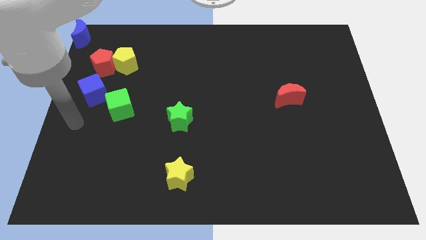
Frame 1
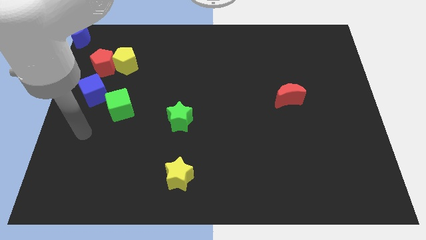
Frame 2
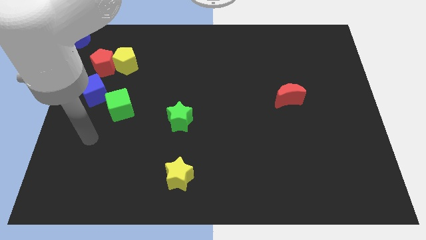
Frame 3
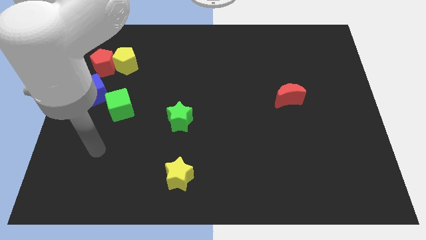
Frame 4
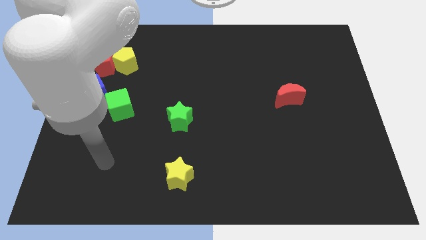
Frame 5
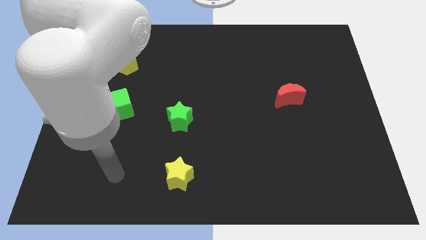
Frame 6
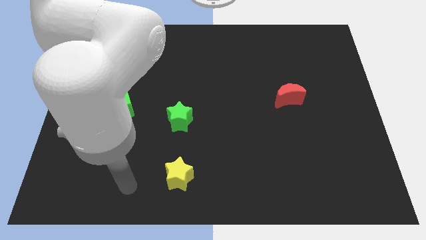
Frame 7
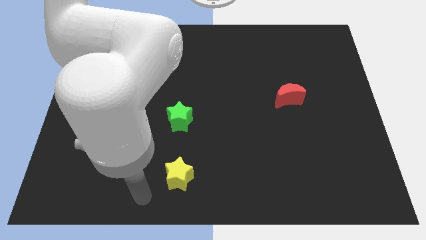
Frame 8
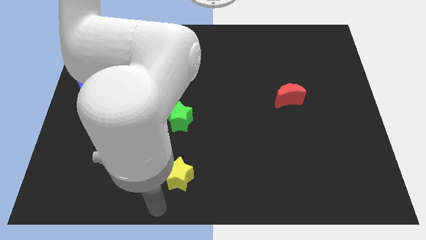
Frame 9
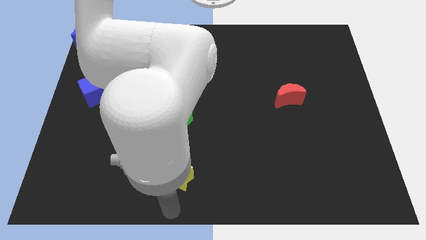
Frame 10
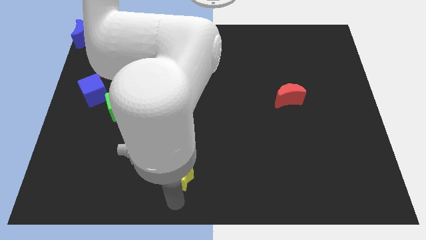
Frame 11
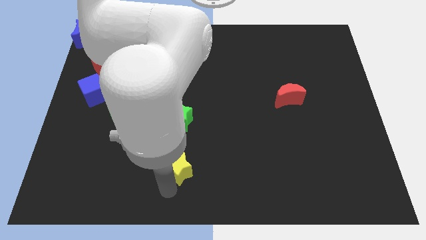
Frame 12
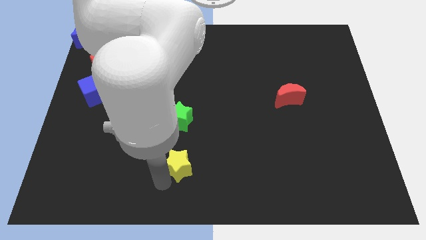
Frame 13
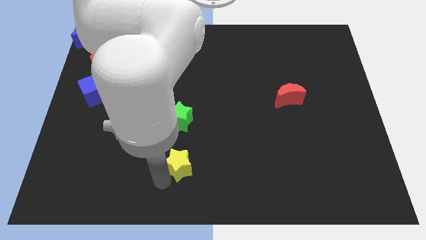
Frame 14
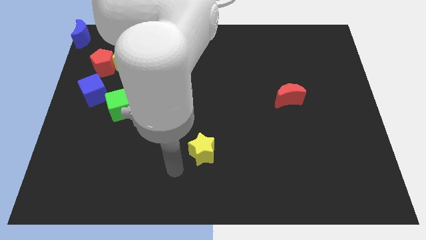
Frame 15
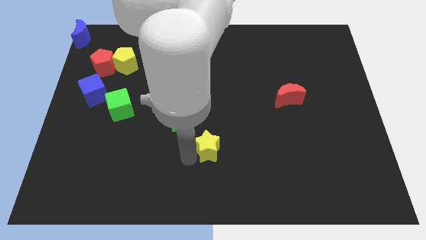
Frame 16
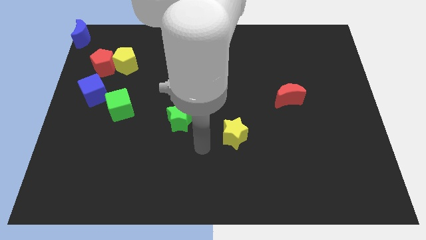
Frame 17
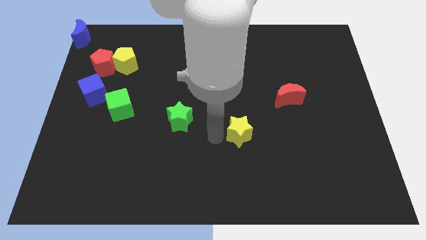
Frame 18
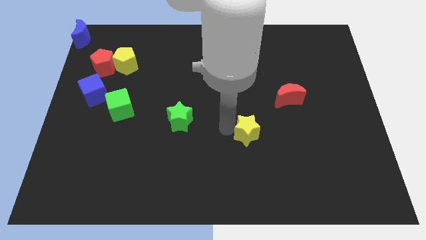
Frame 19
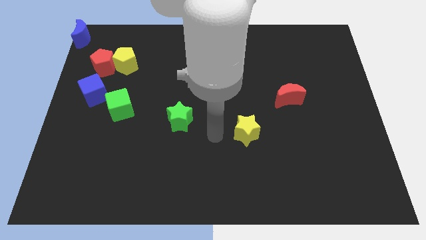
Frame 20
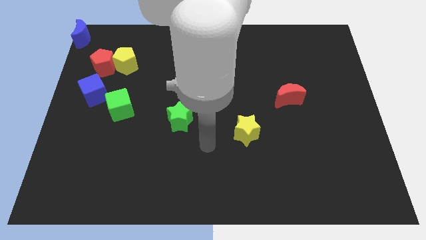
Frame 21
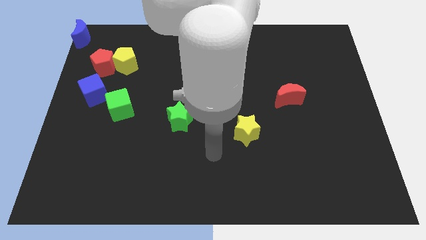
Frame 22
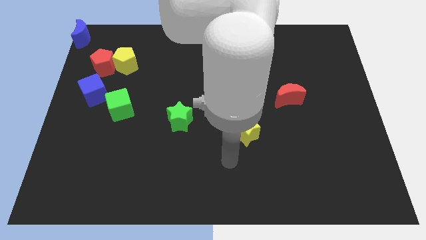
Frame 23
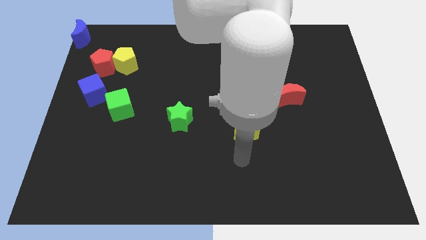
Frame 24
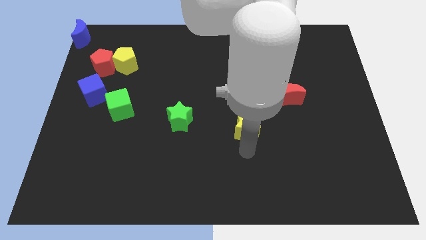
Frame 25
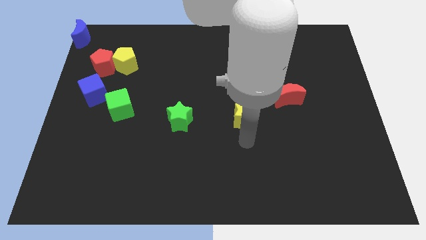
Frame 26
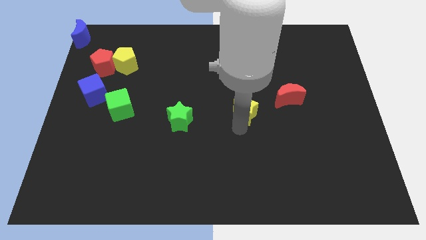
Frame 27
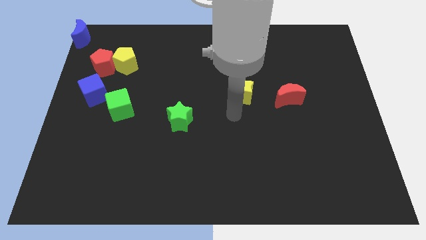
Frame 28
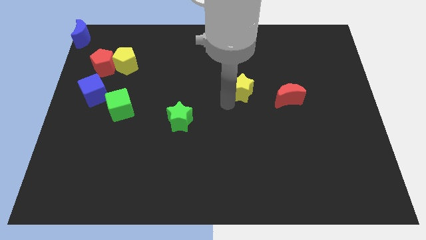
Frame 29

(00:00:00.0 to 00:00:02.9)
place the yellow star to the left of the red moon

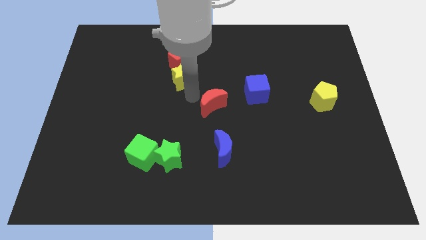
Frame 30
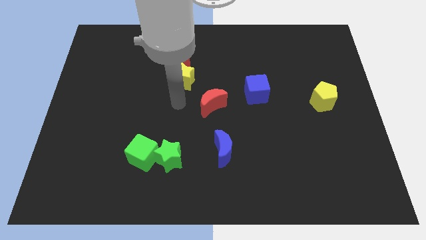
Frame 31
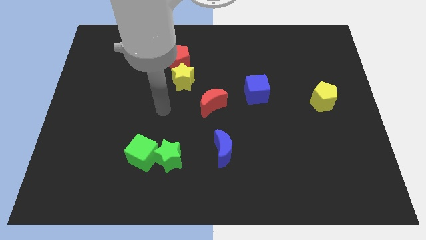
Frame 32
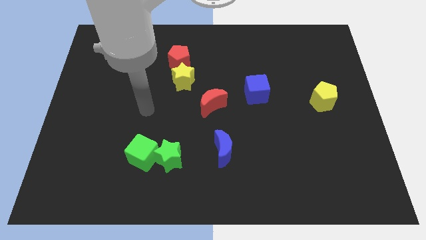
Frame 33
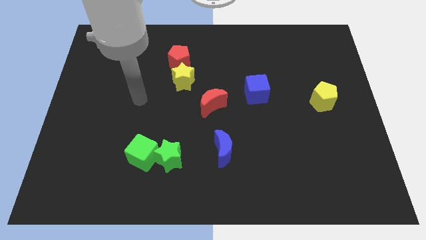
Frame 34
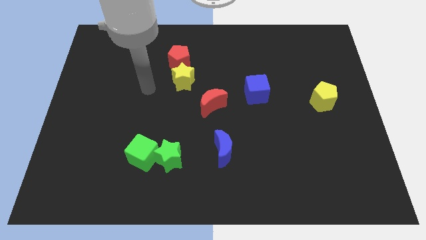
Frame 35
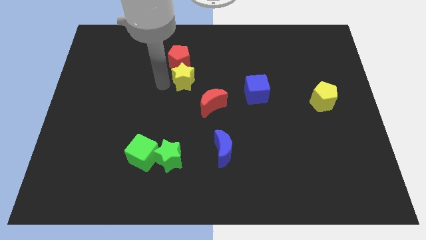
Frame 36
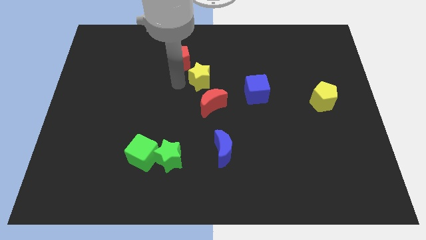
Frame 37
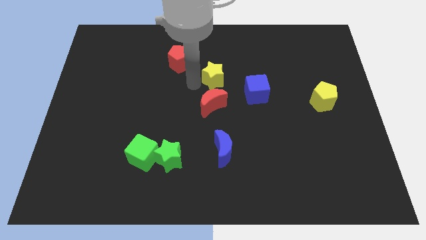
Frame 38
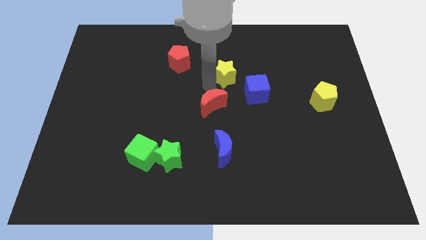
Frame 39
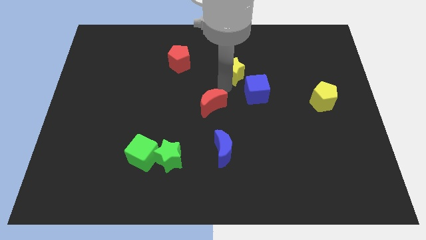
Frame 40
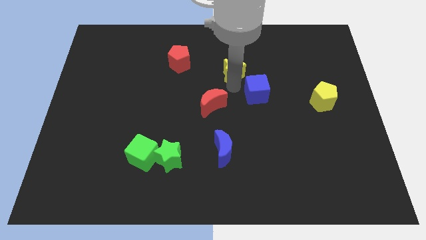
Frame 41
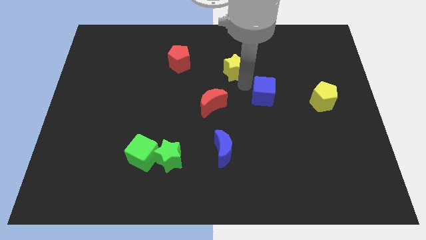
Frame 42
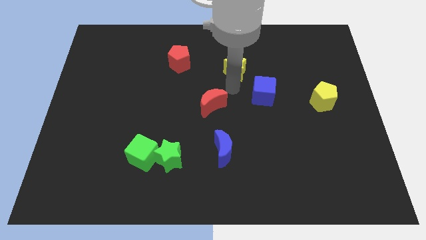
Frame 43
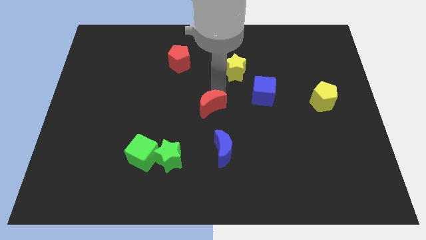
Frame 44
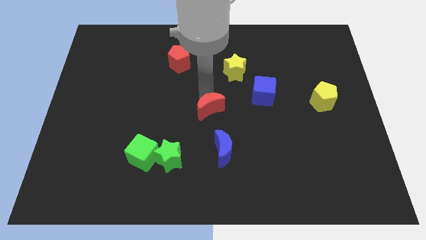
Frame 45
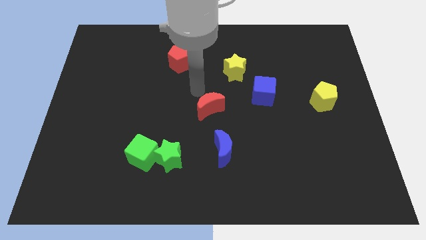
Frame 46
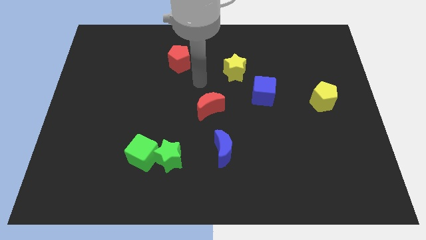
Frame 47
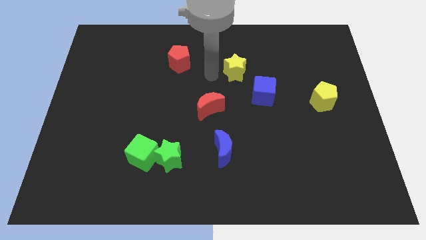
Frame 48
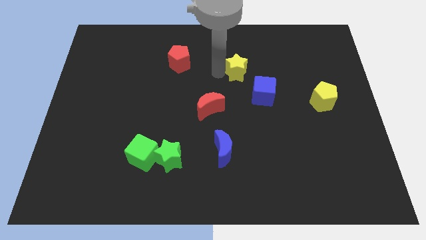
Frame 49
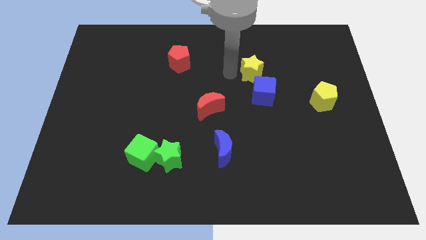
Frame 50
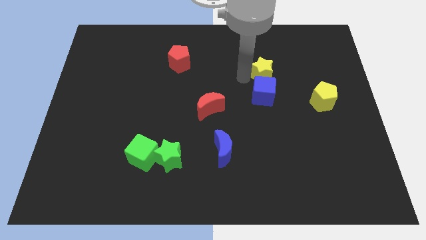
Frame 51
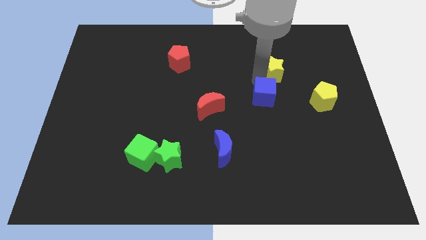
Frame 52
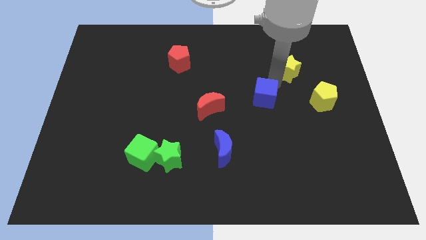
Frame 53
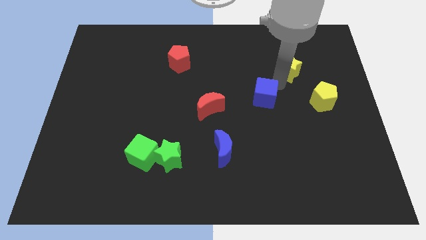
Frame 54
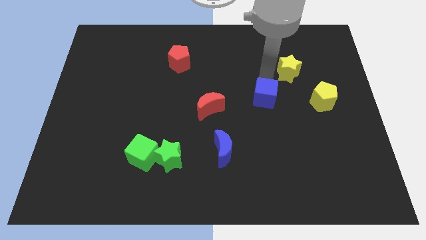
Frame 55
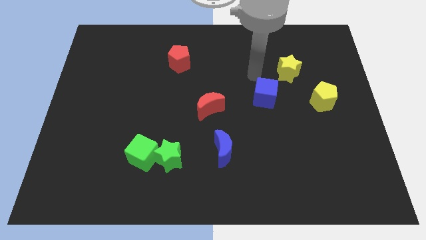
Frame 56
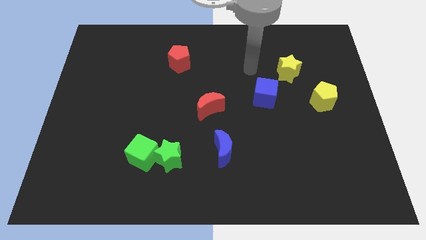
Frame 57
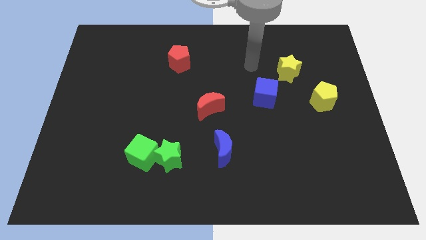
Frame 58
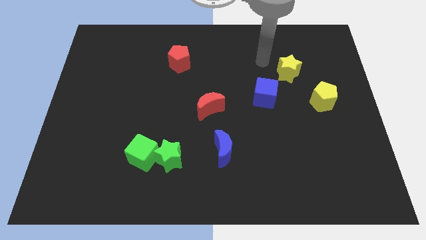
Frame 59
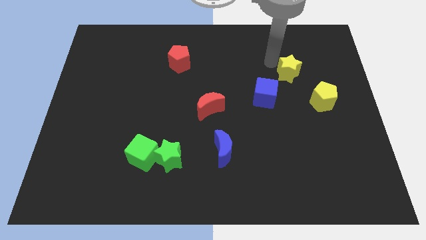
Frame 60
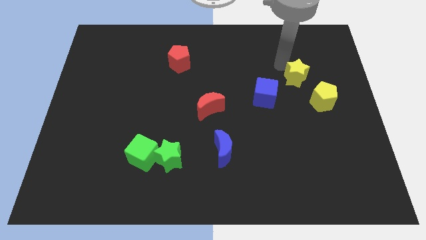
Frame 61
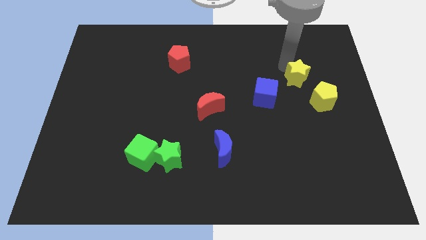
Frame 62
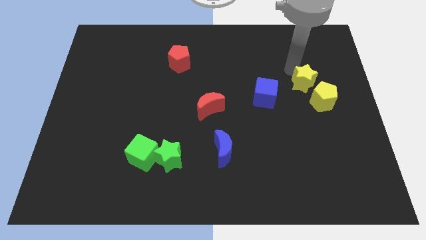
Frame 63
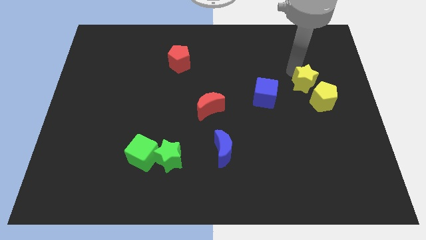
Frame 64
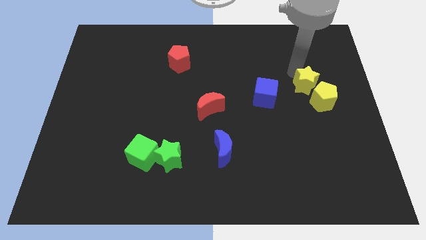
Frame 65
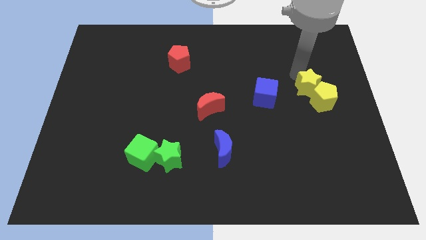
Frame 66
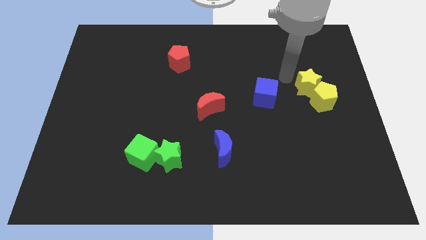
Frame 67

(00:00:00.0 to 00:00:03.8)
move the yellow star into the yellow pentagon

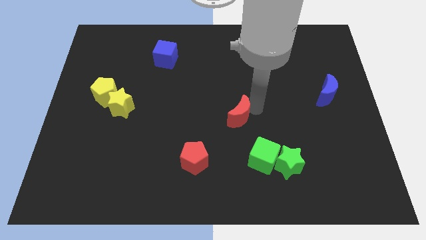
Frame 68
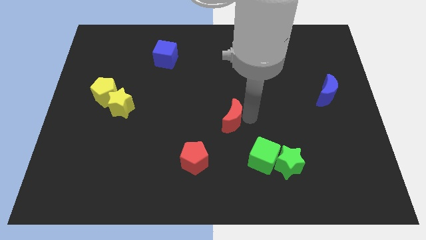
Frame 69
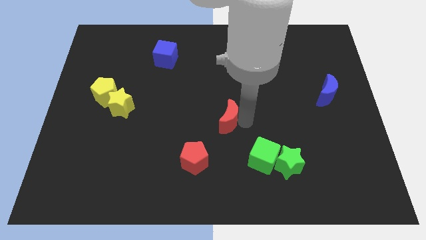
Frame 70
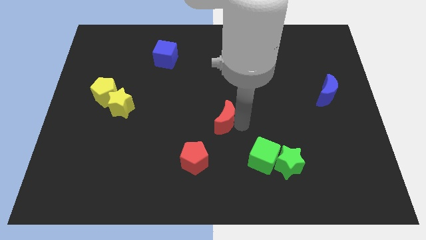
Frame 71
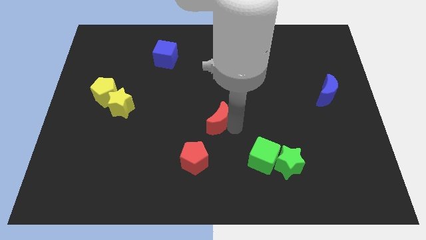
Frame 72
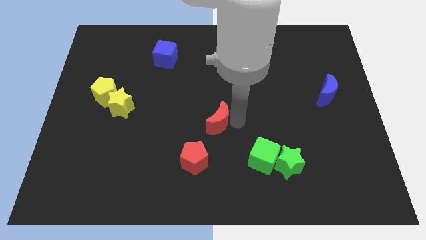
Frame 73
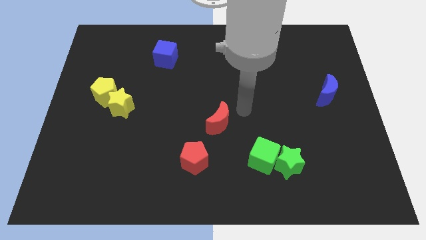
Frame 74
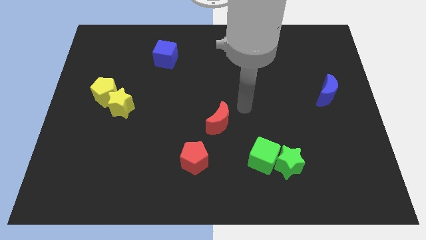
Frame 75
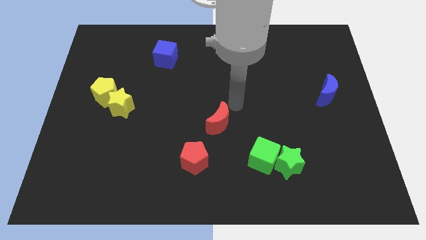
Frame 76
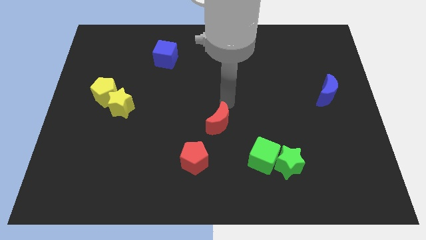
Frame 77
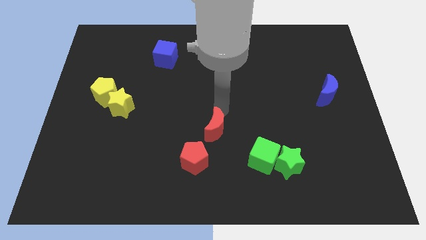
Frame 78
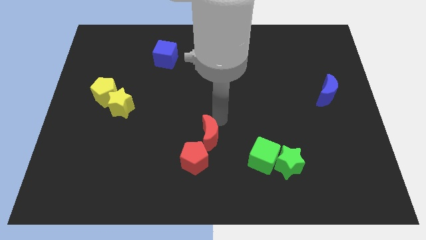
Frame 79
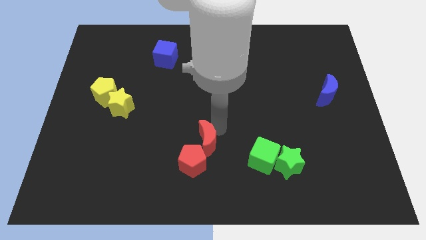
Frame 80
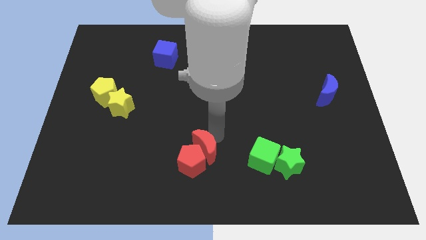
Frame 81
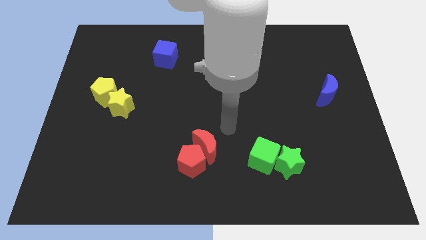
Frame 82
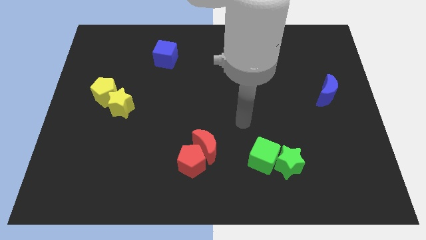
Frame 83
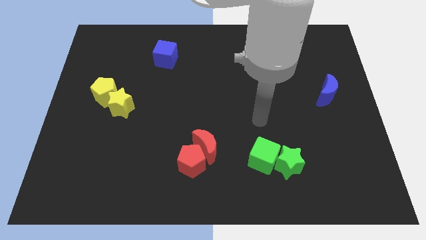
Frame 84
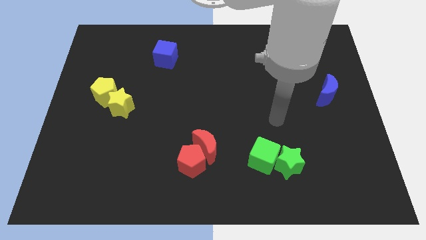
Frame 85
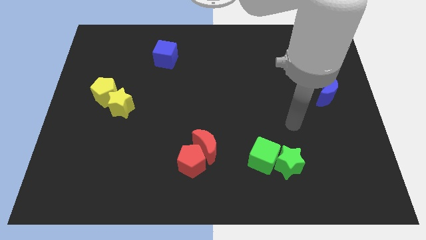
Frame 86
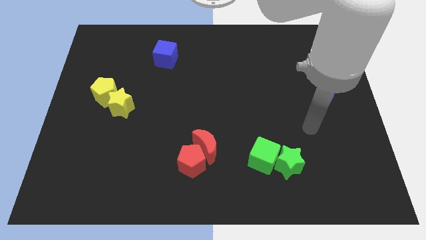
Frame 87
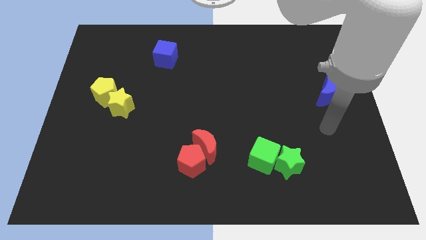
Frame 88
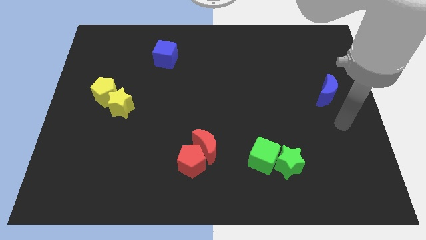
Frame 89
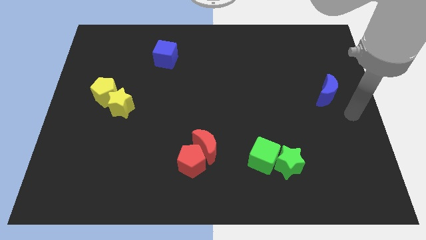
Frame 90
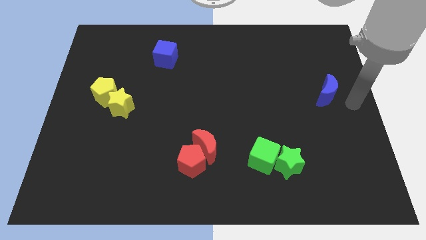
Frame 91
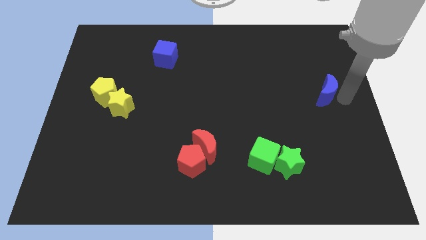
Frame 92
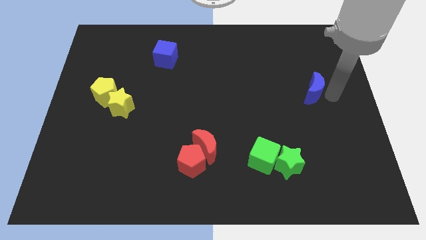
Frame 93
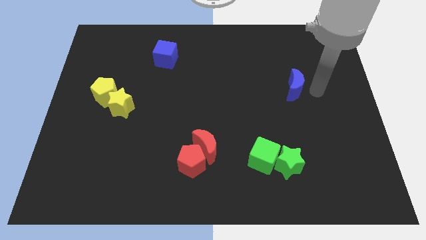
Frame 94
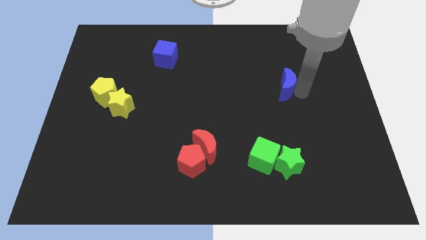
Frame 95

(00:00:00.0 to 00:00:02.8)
move blue crescent slightly towards left
